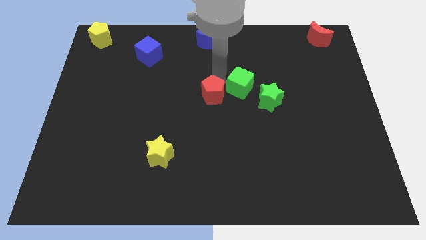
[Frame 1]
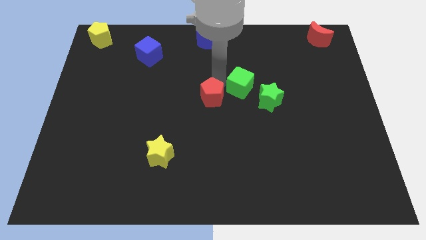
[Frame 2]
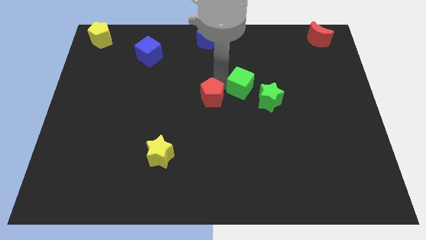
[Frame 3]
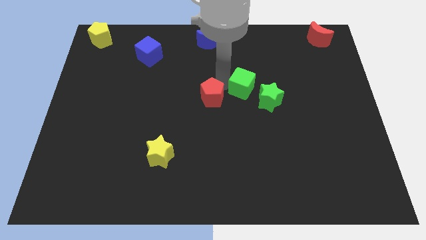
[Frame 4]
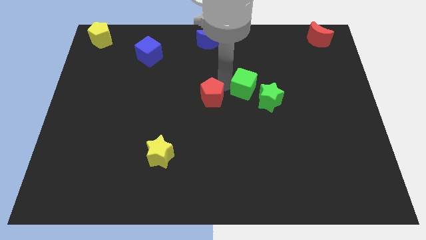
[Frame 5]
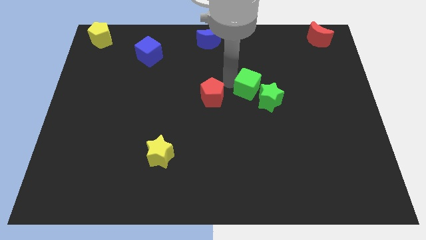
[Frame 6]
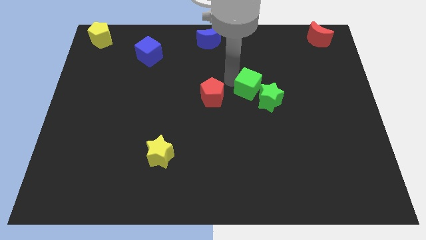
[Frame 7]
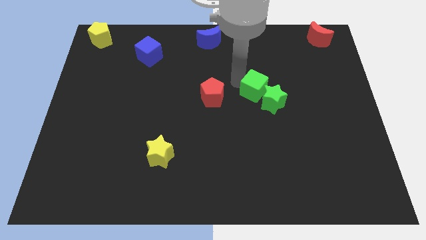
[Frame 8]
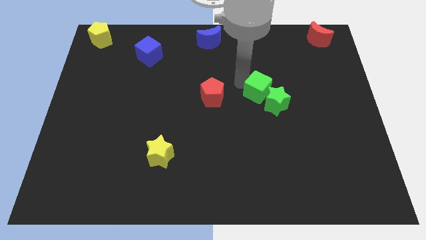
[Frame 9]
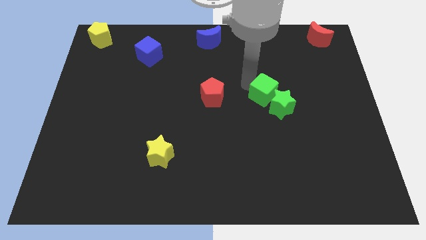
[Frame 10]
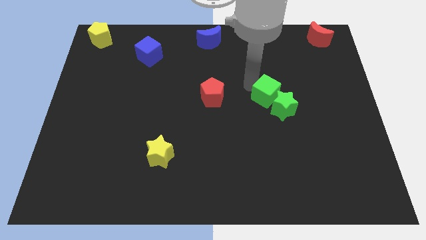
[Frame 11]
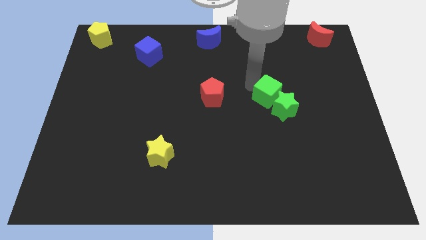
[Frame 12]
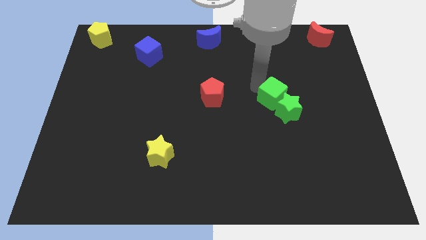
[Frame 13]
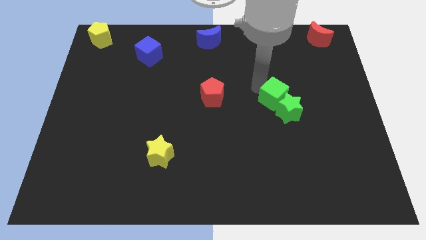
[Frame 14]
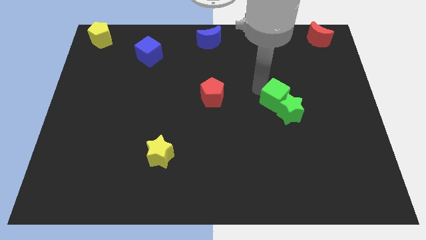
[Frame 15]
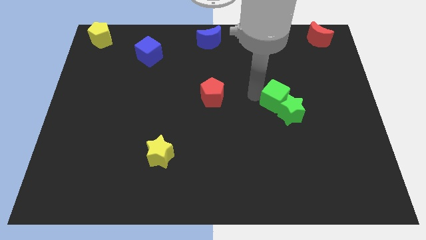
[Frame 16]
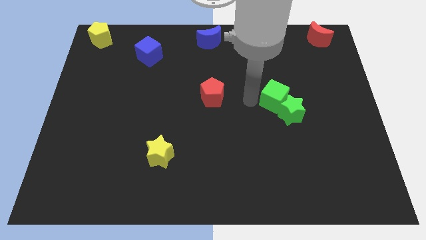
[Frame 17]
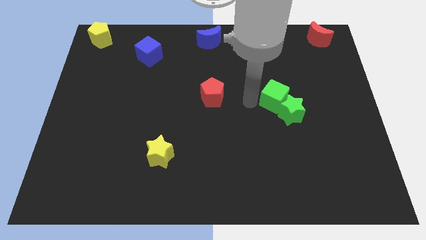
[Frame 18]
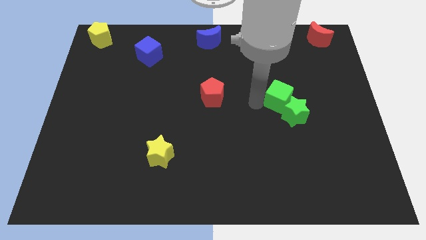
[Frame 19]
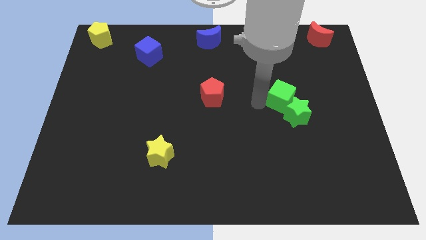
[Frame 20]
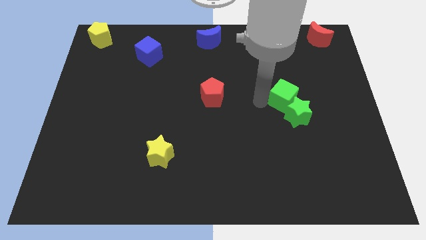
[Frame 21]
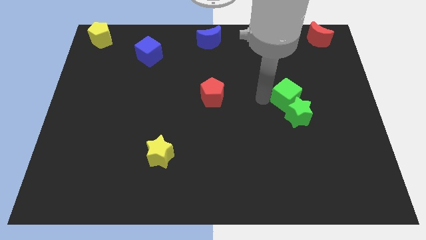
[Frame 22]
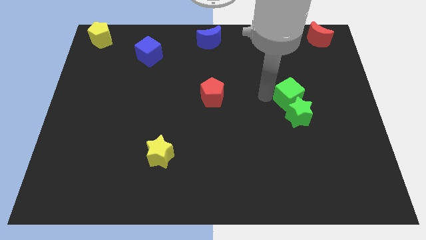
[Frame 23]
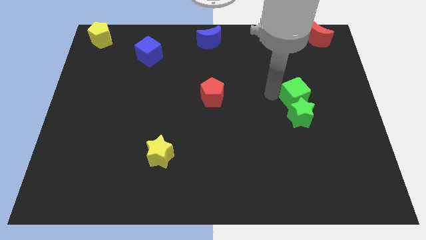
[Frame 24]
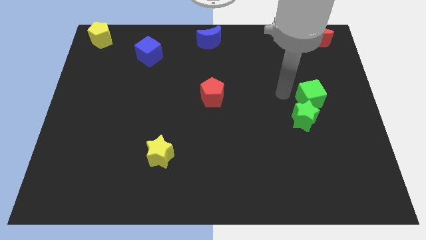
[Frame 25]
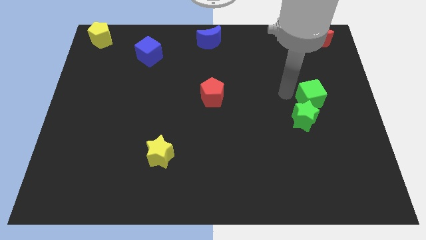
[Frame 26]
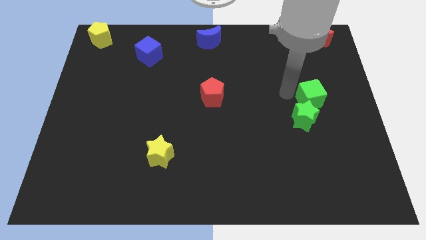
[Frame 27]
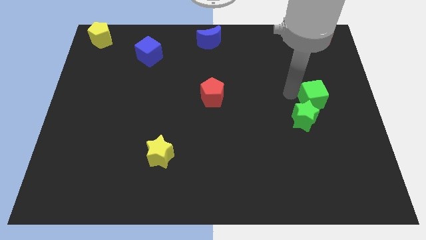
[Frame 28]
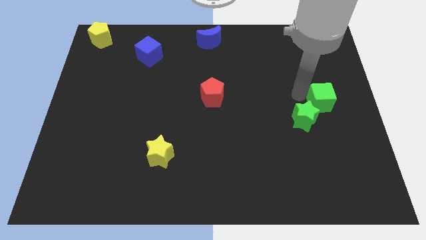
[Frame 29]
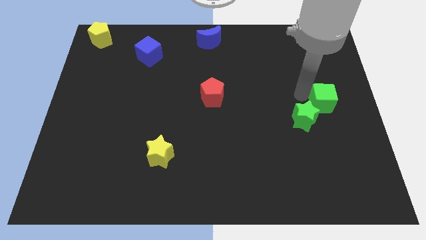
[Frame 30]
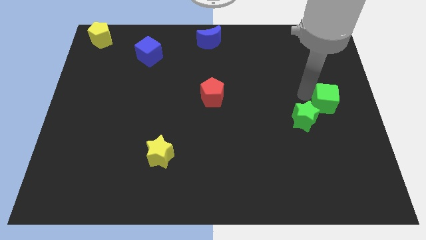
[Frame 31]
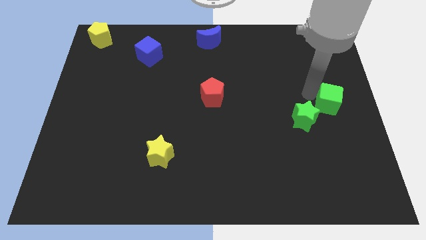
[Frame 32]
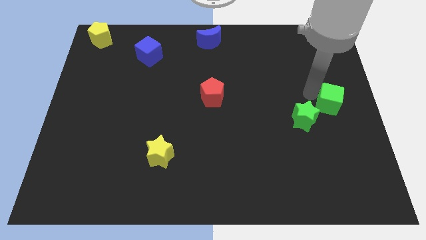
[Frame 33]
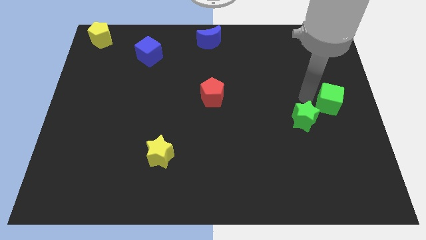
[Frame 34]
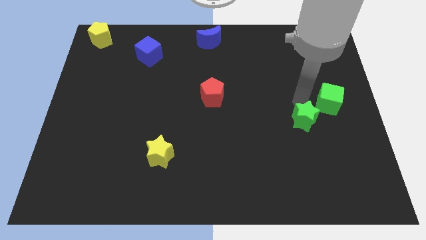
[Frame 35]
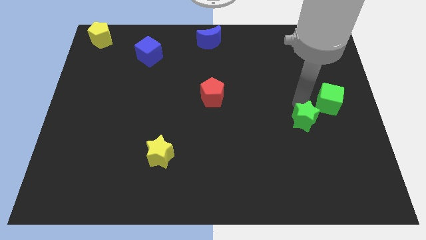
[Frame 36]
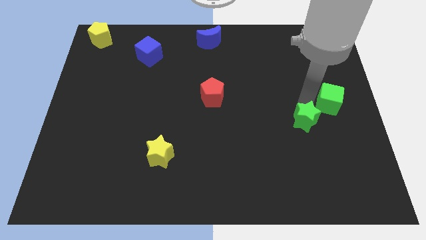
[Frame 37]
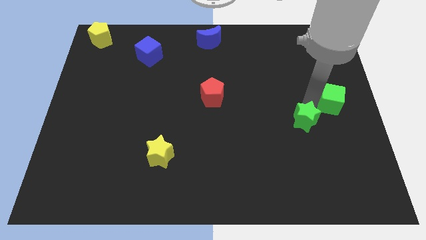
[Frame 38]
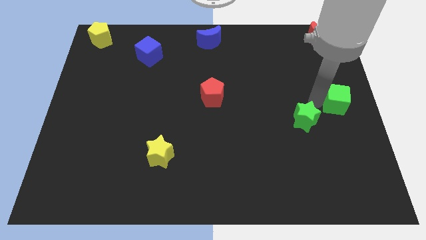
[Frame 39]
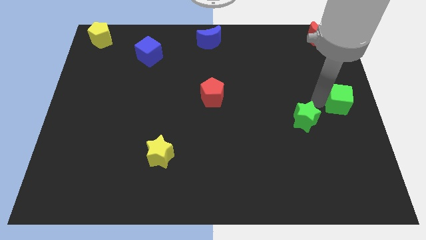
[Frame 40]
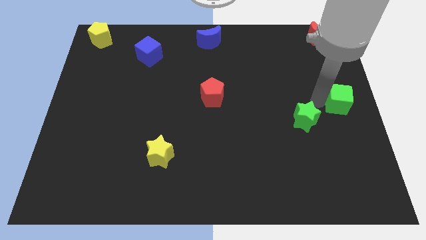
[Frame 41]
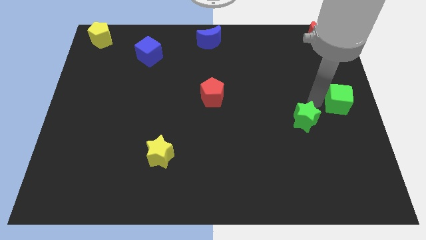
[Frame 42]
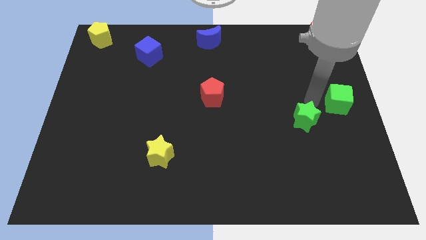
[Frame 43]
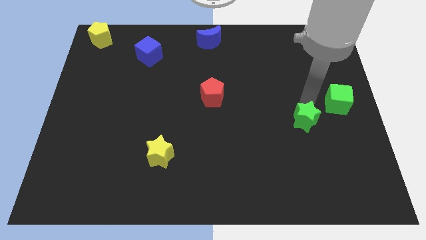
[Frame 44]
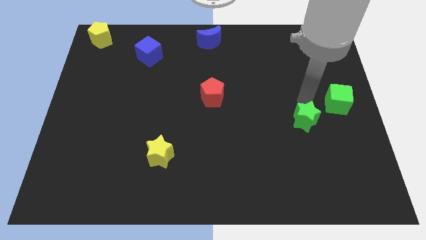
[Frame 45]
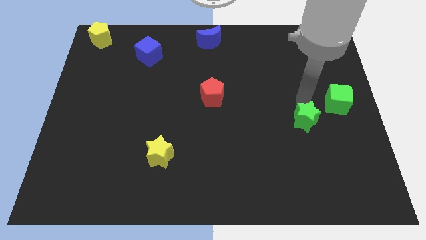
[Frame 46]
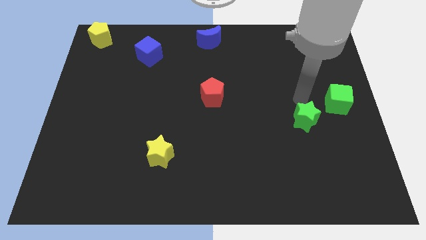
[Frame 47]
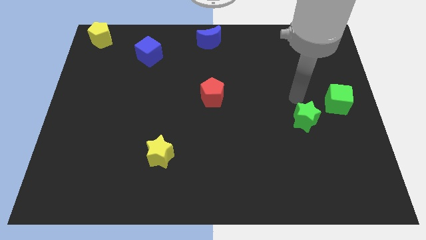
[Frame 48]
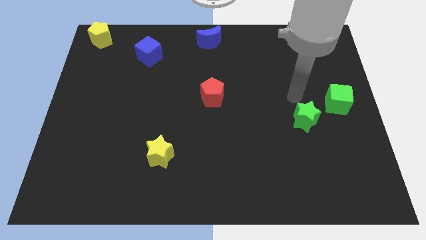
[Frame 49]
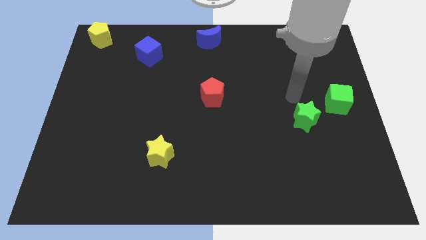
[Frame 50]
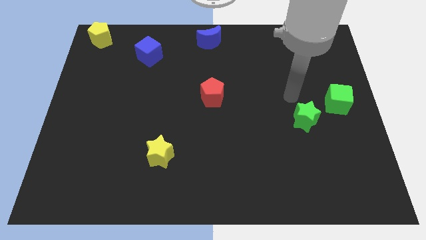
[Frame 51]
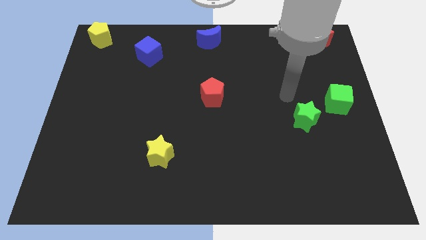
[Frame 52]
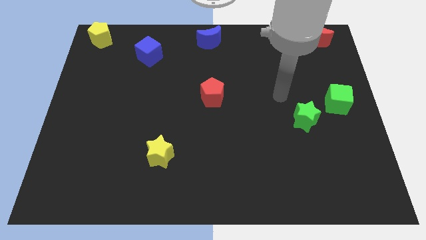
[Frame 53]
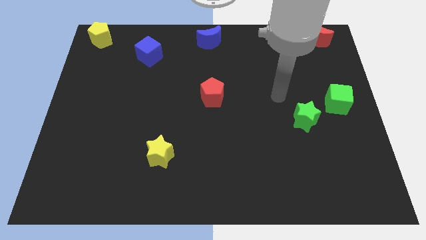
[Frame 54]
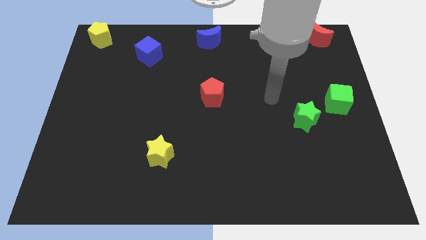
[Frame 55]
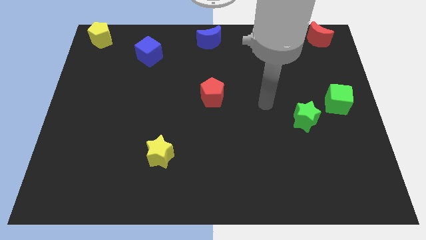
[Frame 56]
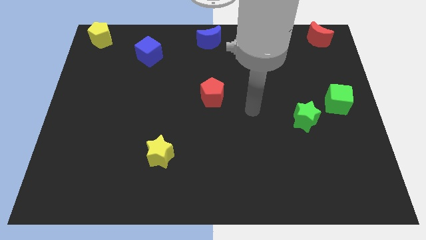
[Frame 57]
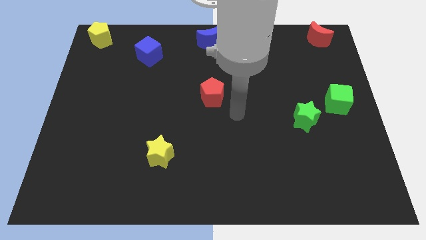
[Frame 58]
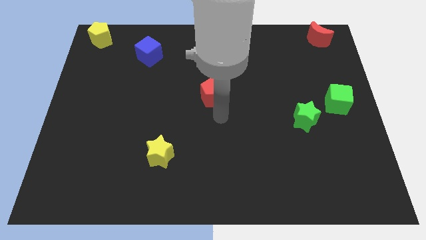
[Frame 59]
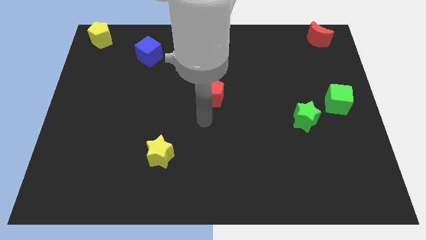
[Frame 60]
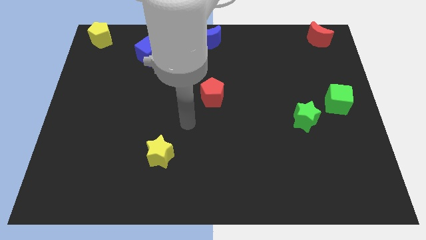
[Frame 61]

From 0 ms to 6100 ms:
place the green cube below the red crescent

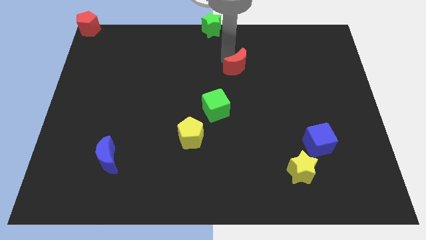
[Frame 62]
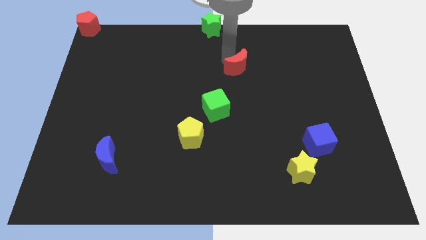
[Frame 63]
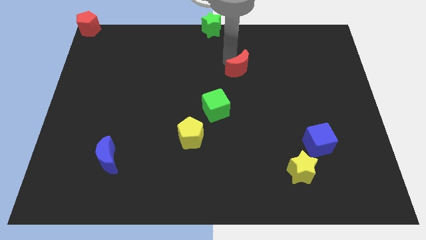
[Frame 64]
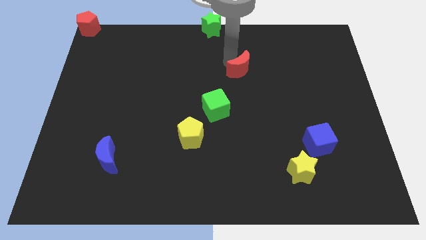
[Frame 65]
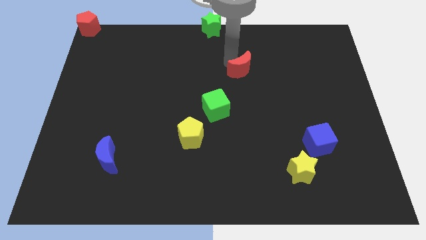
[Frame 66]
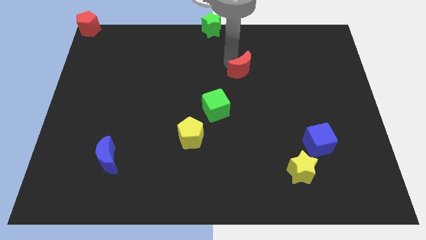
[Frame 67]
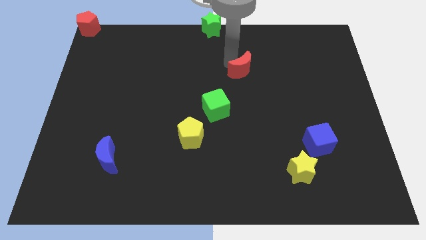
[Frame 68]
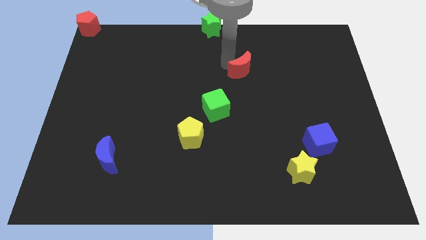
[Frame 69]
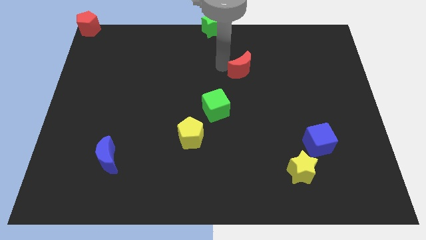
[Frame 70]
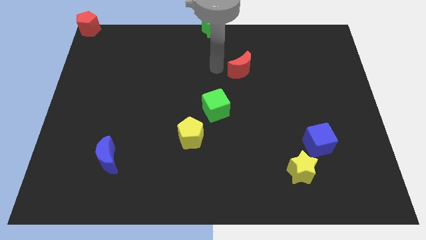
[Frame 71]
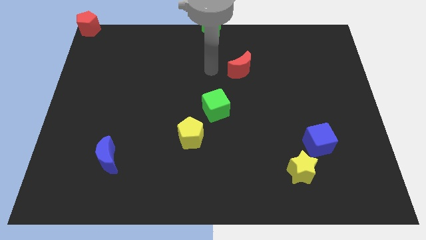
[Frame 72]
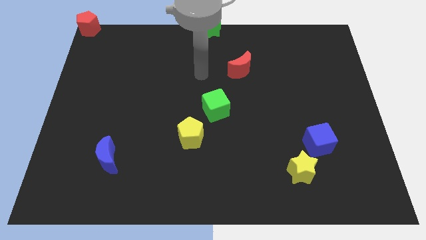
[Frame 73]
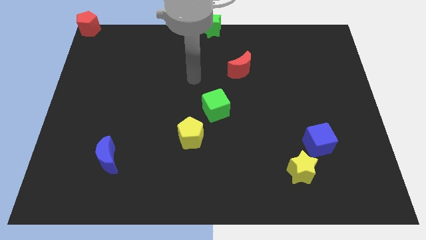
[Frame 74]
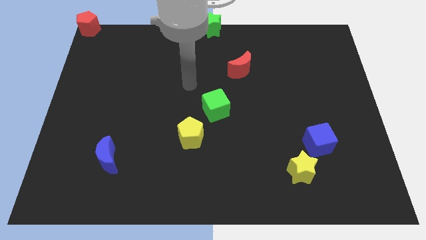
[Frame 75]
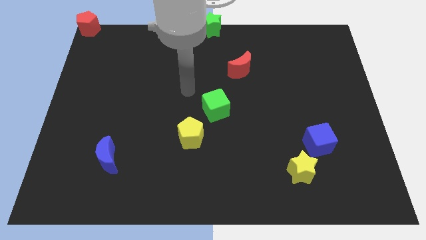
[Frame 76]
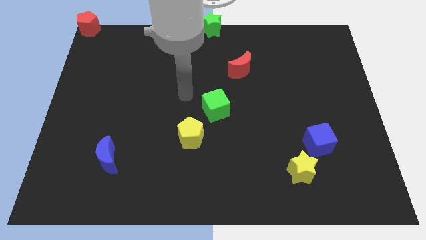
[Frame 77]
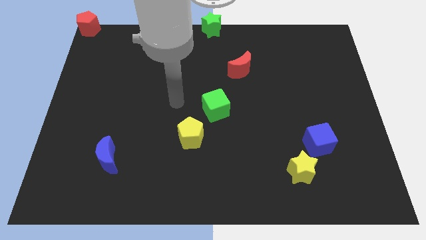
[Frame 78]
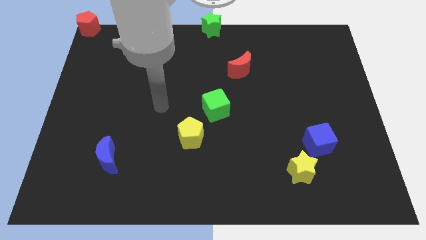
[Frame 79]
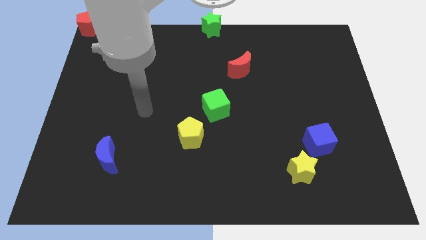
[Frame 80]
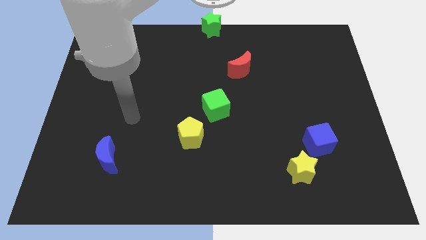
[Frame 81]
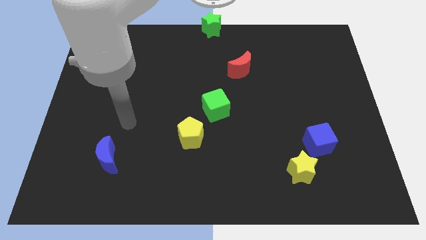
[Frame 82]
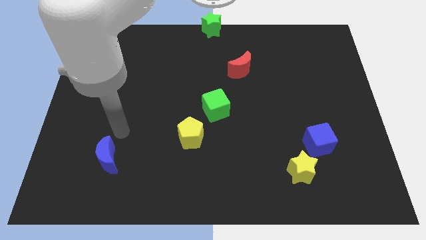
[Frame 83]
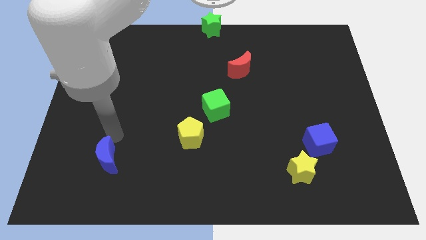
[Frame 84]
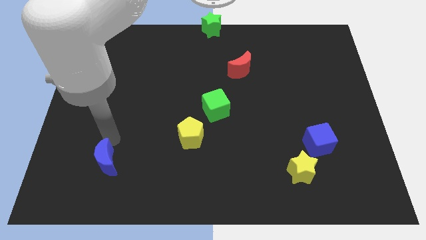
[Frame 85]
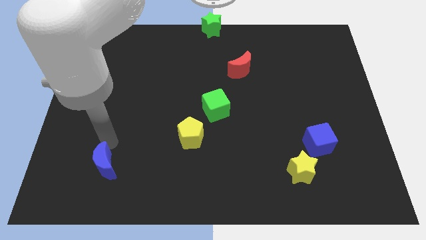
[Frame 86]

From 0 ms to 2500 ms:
slightly move the red crescent

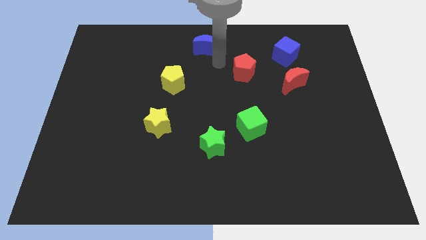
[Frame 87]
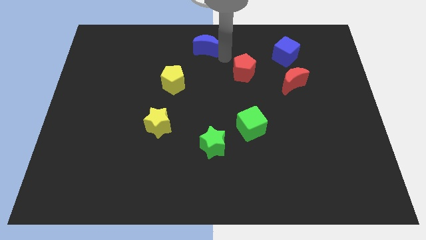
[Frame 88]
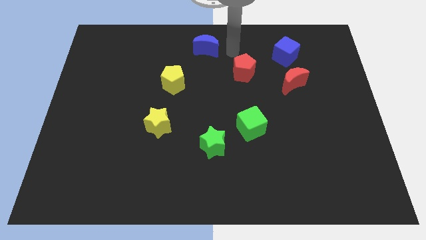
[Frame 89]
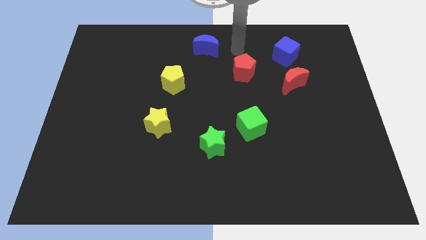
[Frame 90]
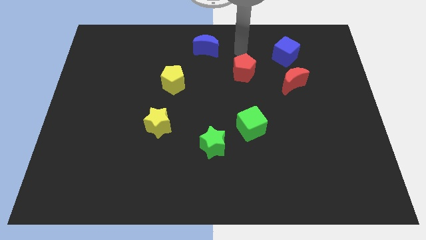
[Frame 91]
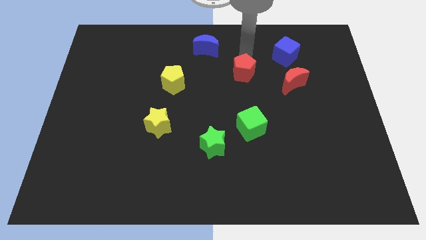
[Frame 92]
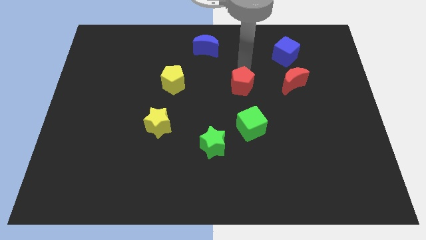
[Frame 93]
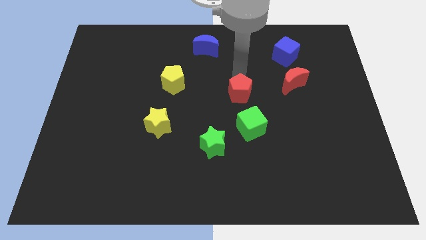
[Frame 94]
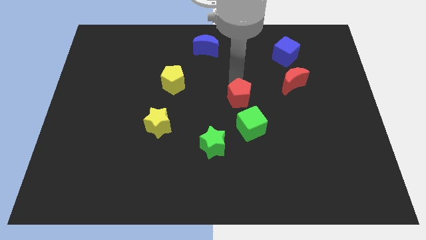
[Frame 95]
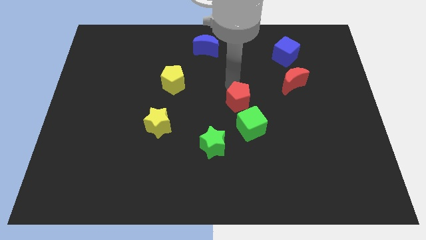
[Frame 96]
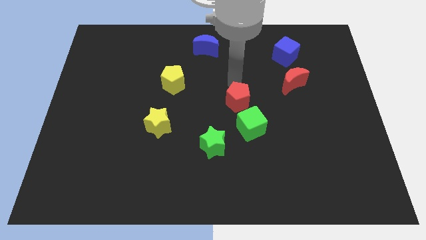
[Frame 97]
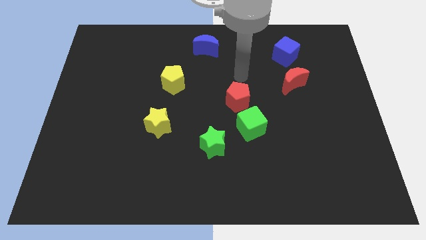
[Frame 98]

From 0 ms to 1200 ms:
push the red pentagon to the top left side of the green cube
